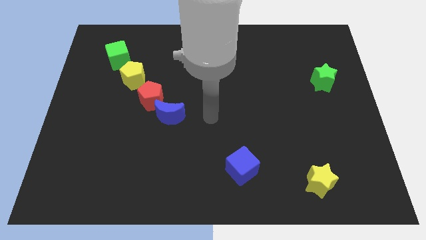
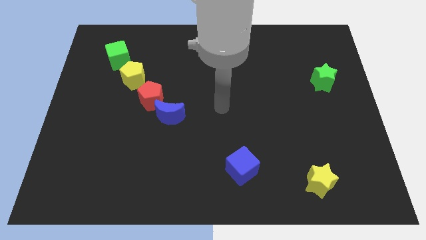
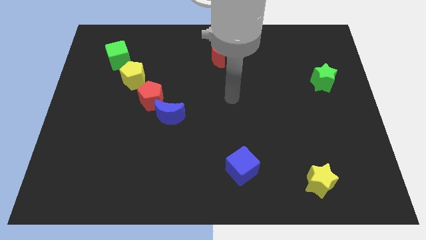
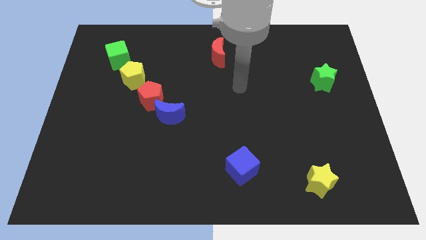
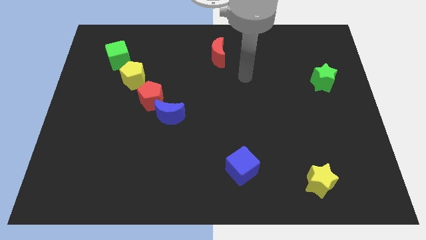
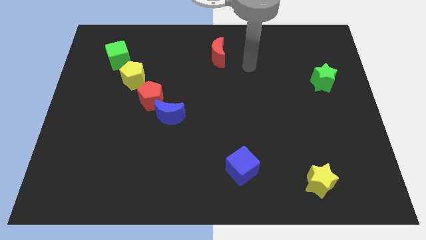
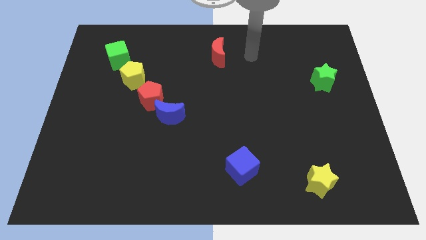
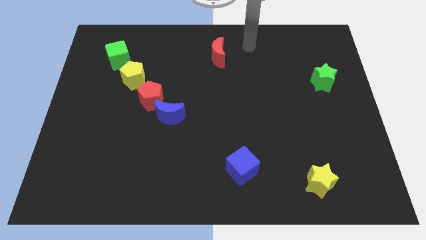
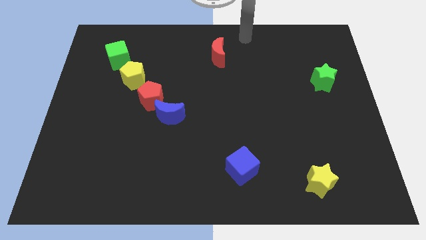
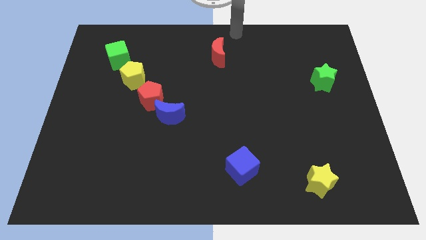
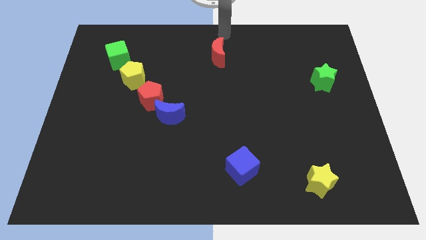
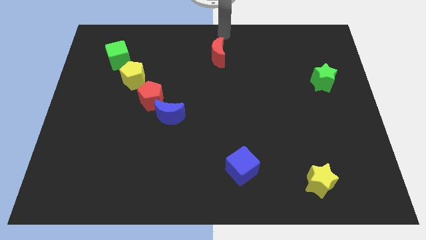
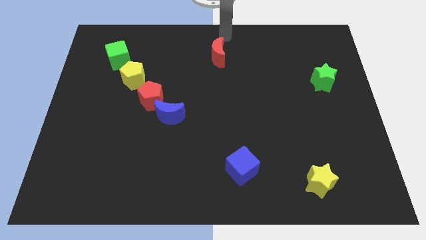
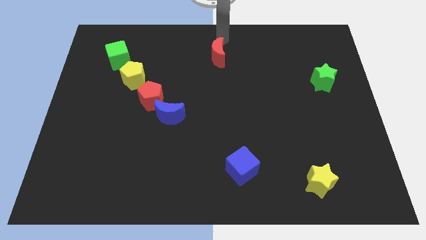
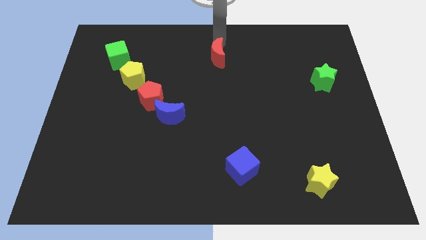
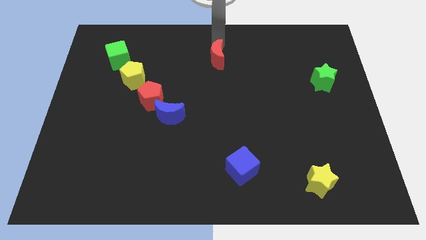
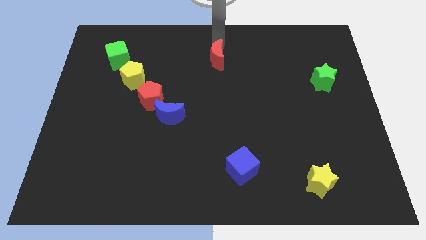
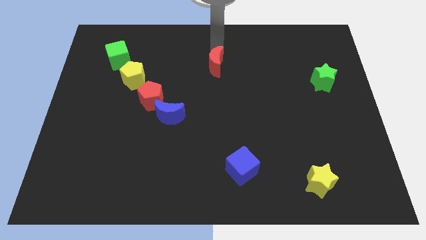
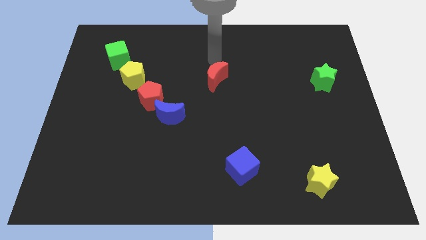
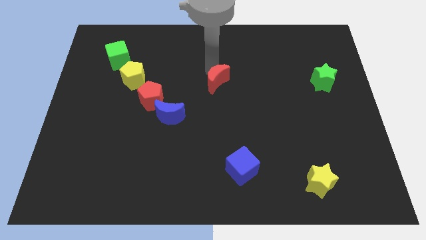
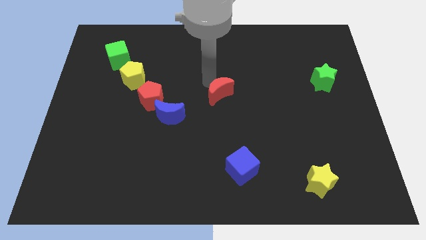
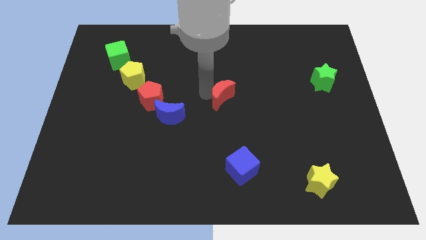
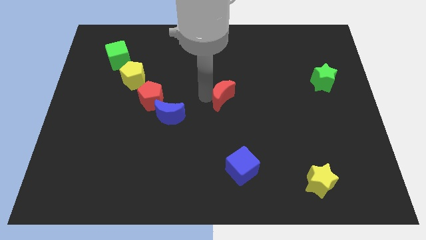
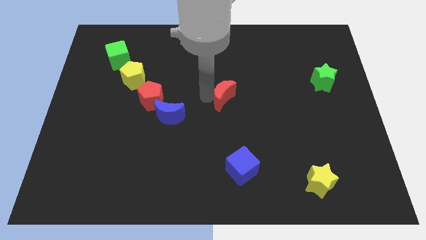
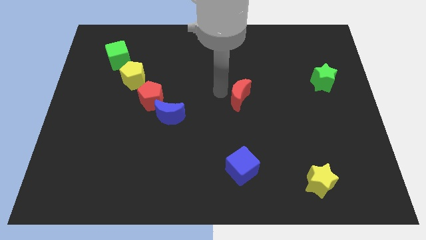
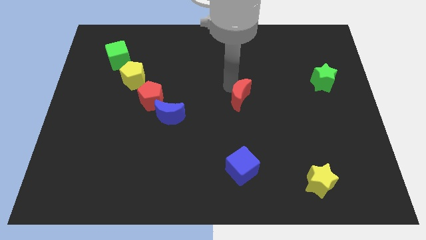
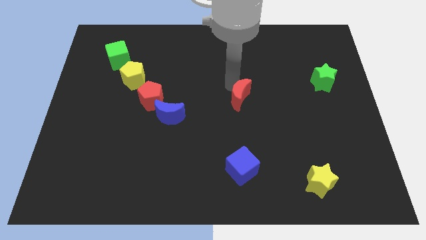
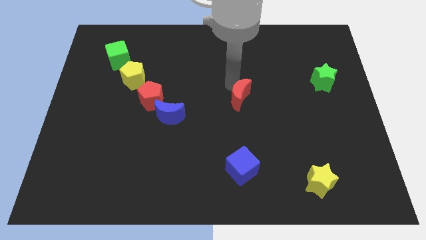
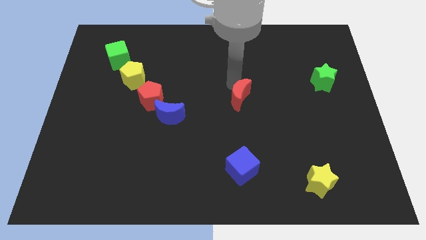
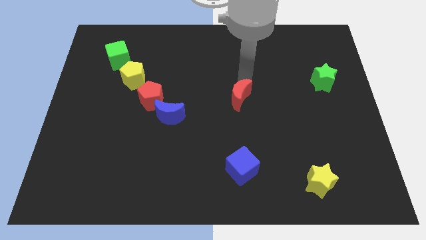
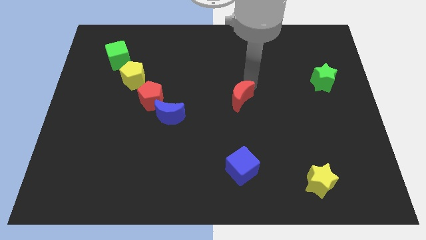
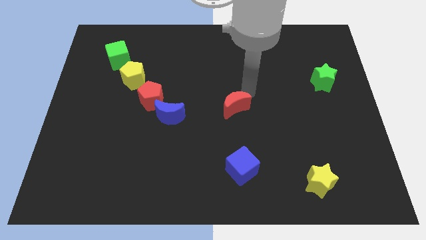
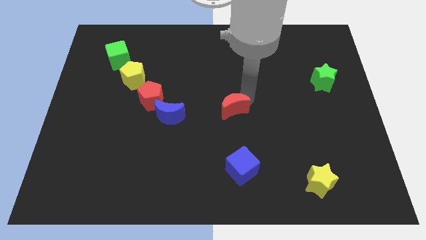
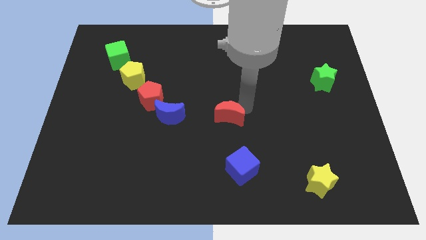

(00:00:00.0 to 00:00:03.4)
push the red crescent to the center of the board

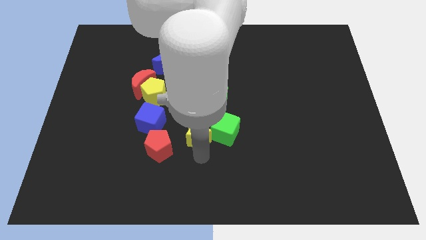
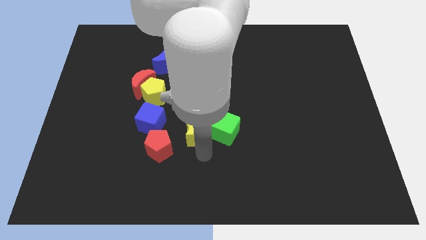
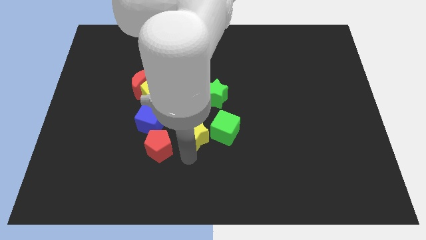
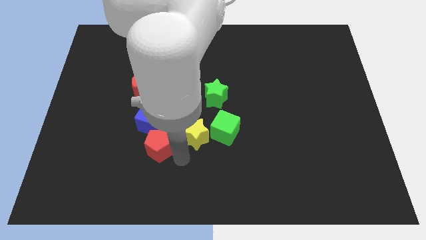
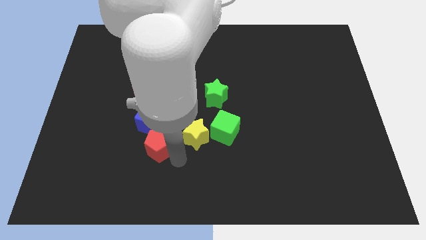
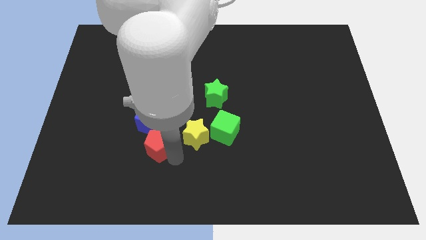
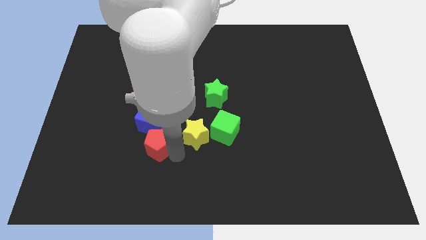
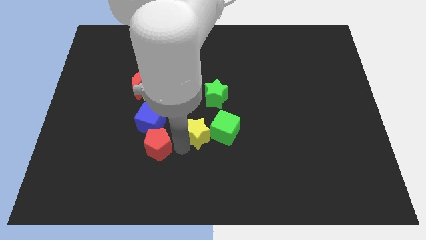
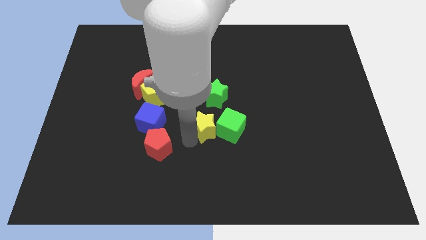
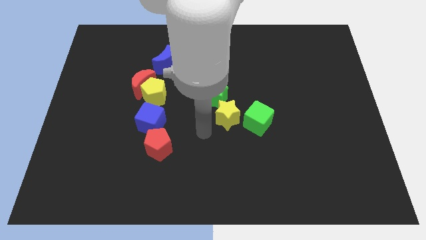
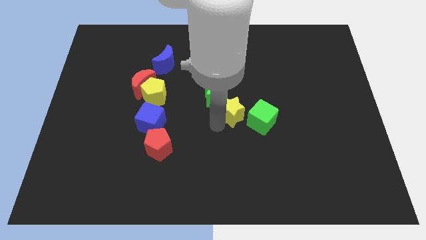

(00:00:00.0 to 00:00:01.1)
push yellow star in between green blocks

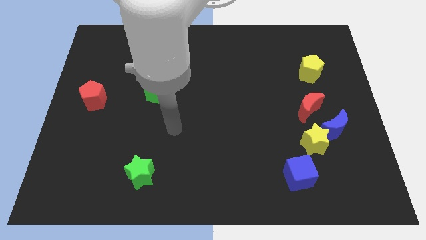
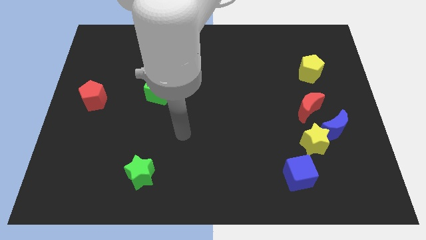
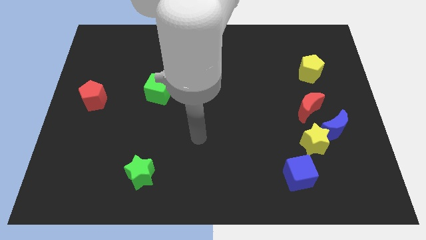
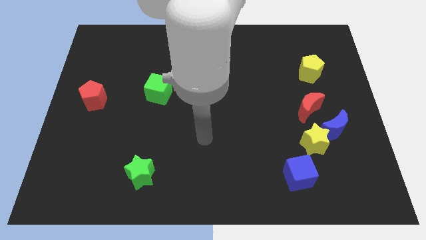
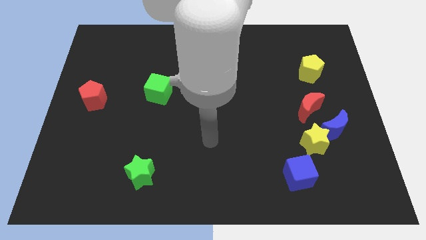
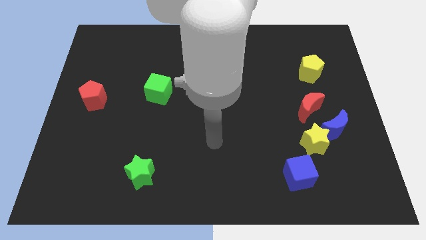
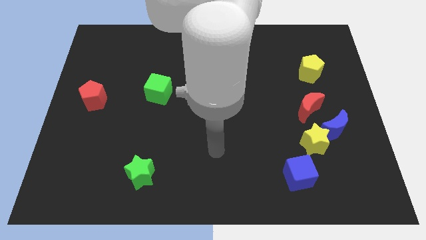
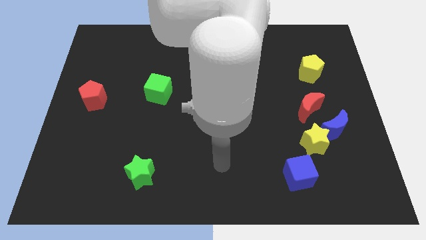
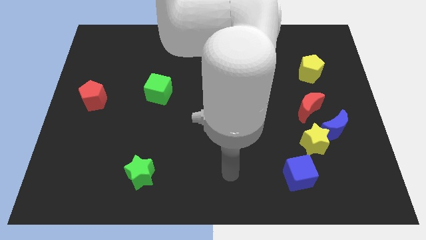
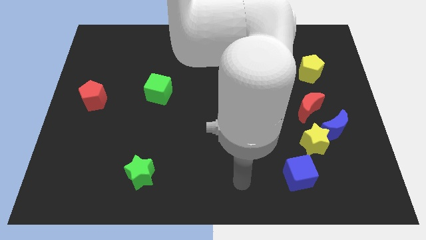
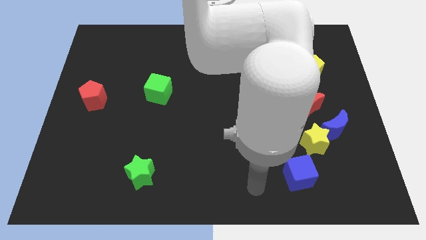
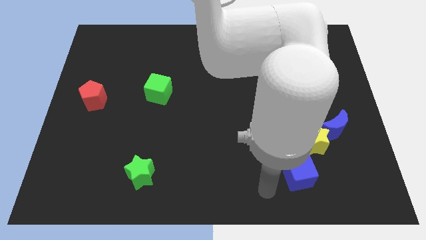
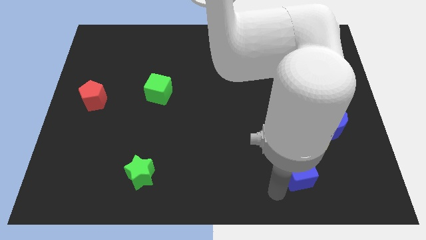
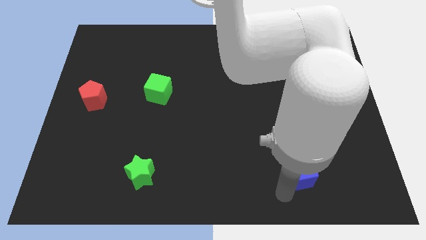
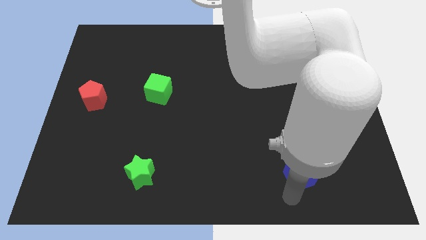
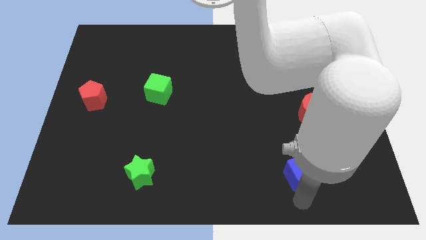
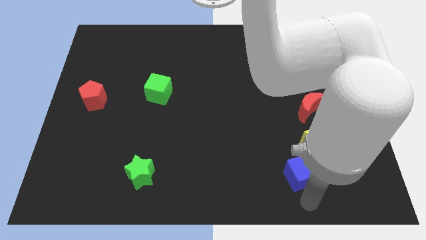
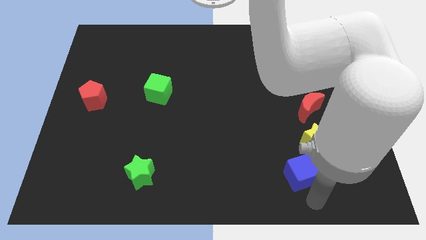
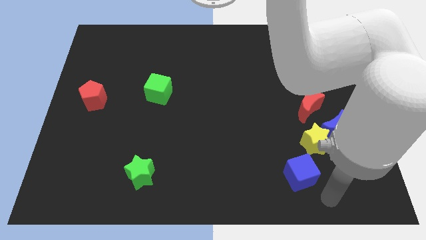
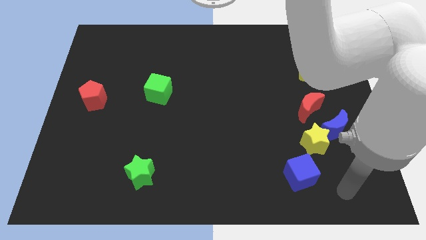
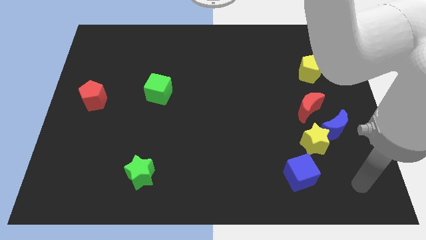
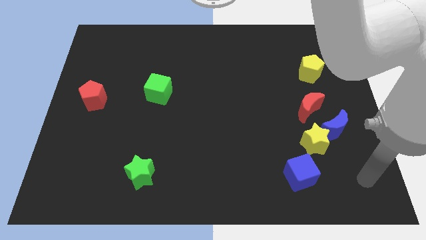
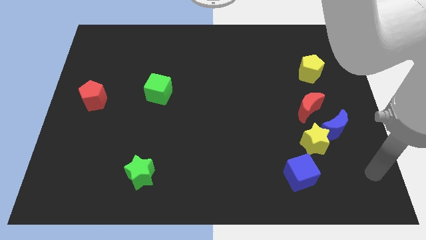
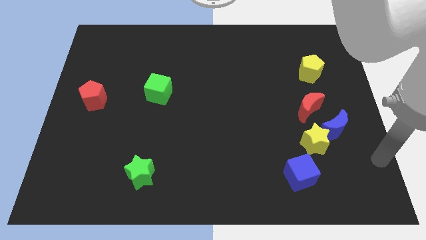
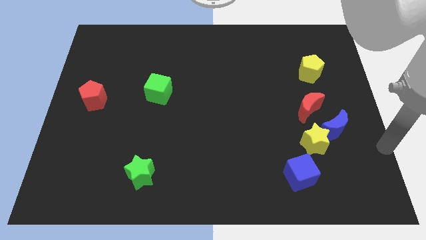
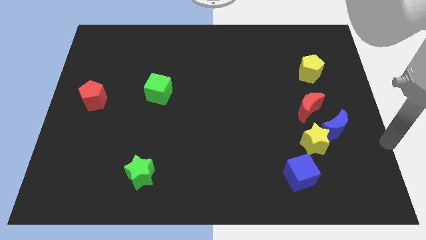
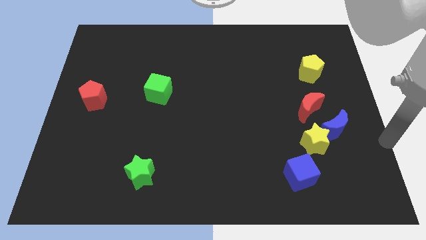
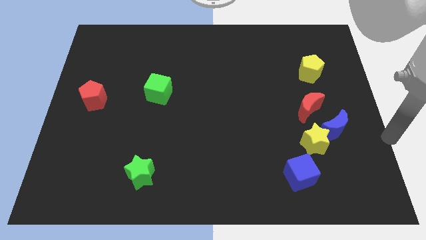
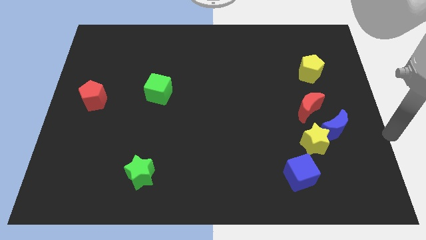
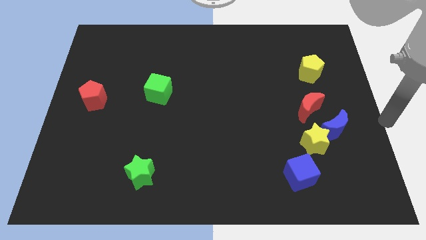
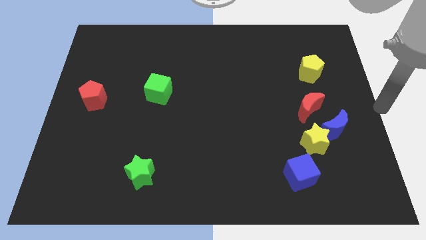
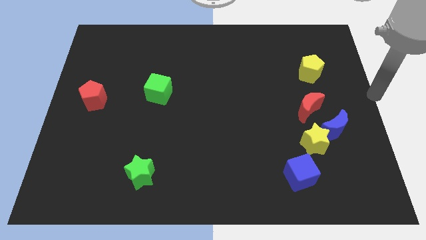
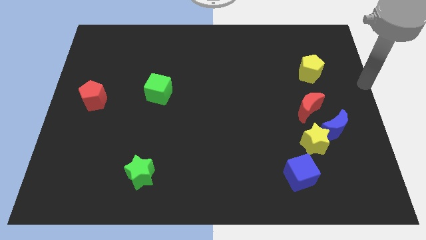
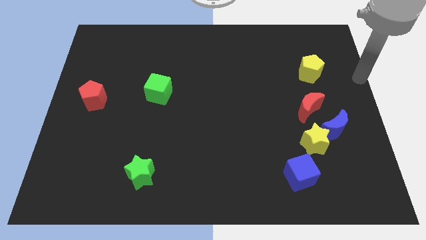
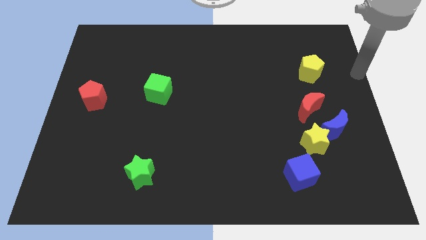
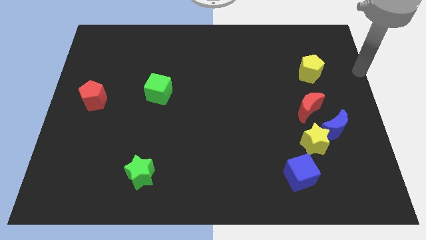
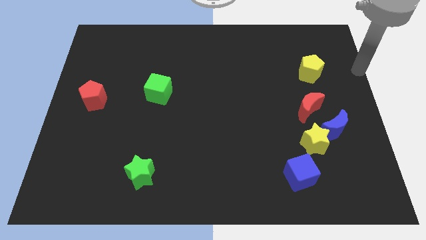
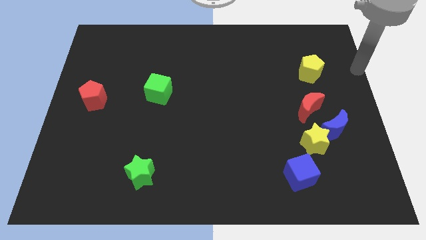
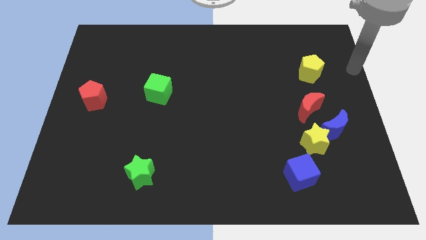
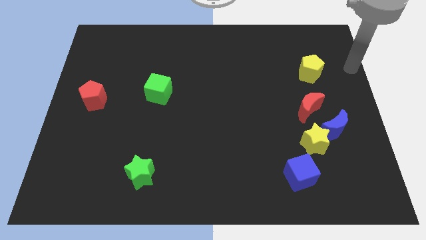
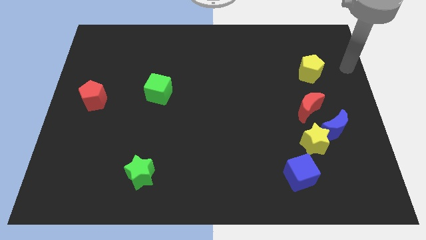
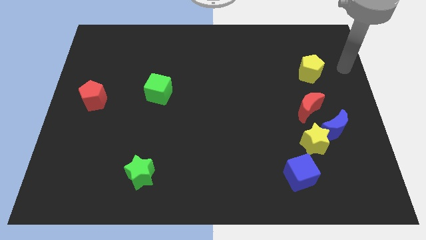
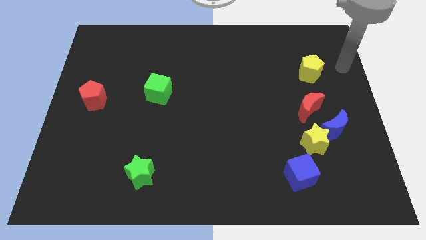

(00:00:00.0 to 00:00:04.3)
place your arm to the right side of the yellow pentagon
